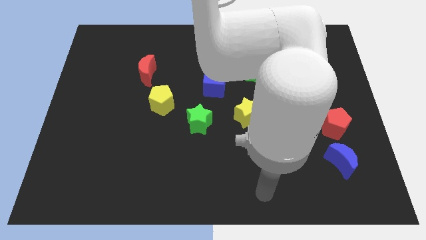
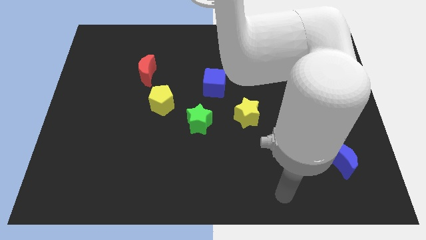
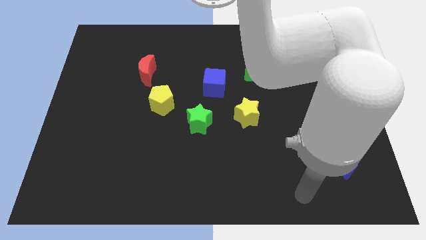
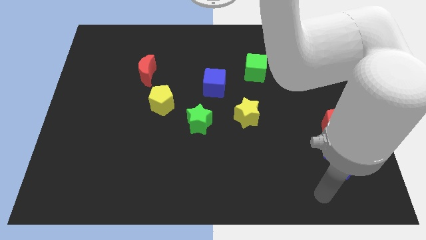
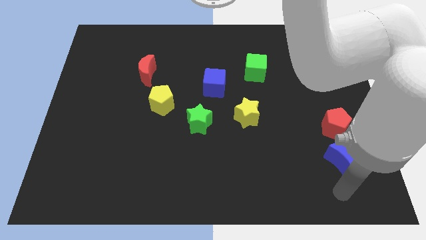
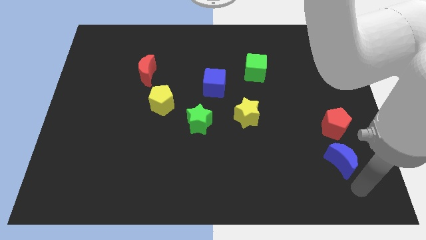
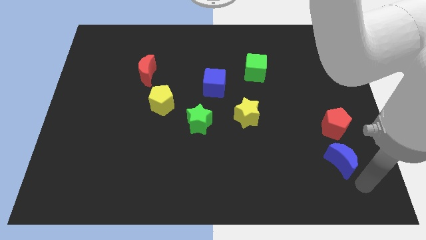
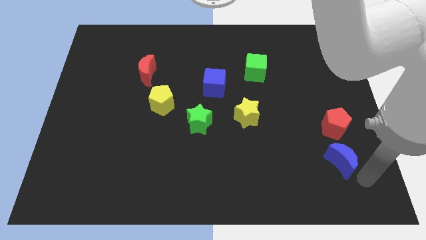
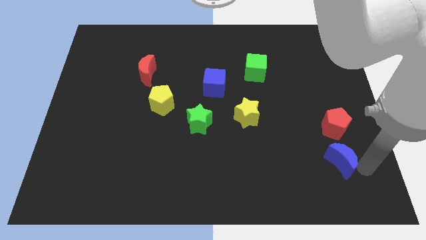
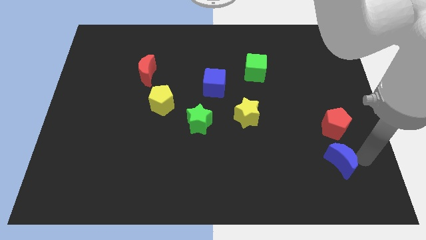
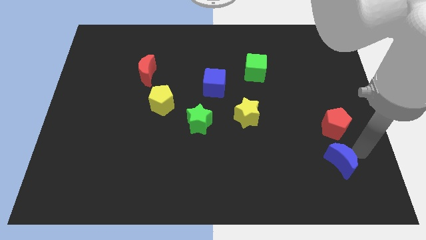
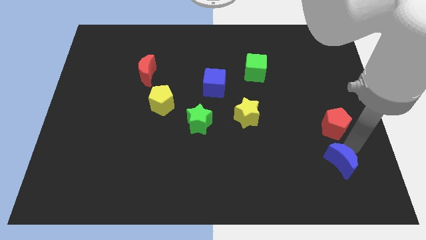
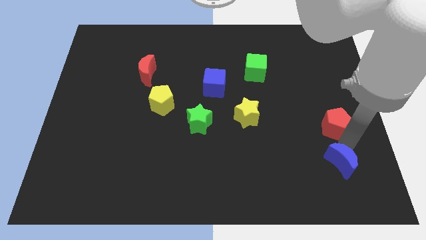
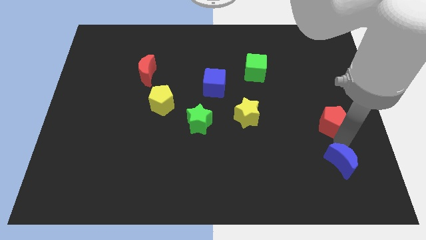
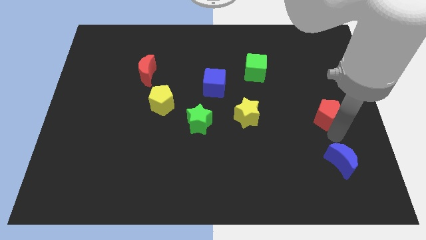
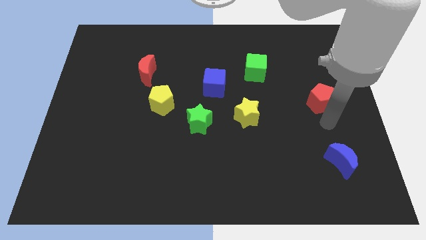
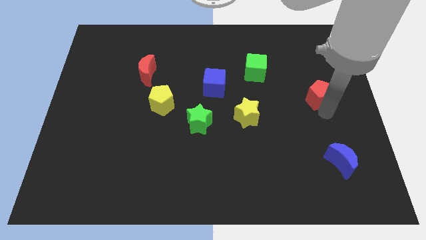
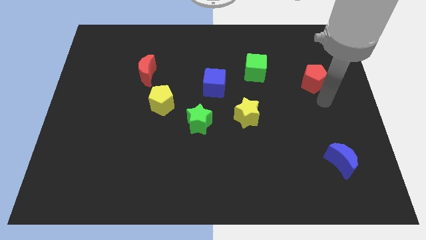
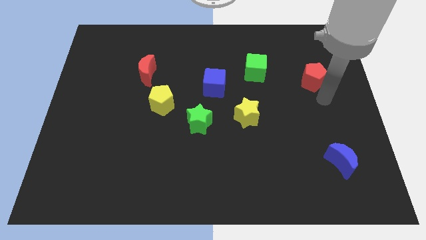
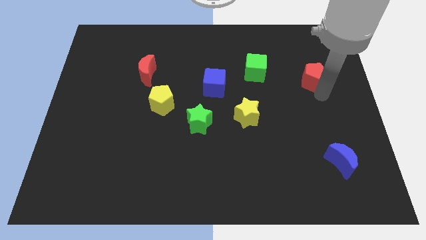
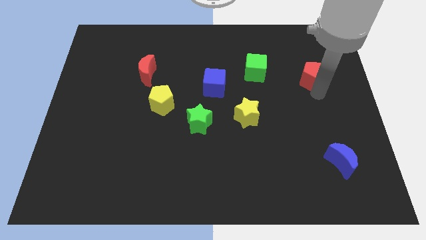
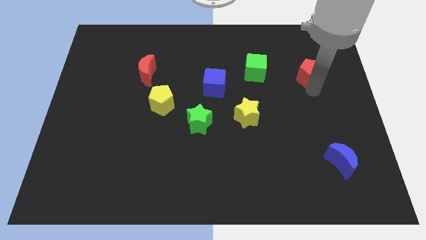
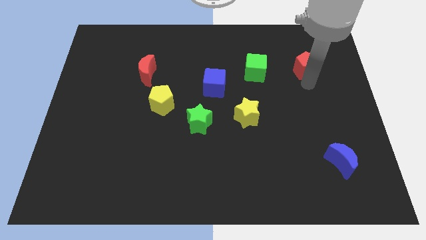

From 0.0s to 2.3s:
move the red pentagon to the right of the green cube

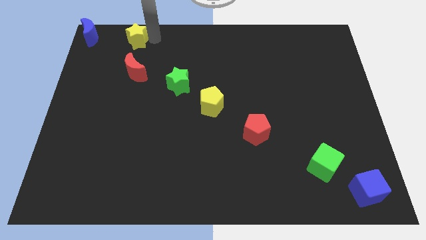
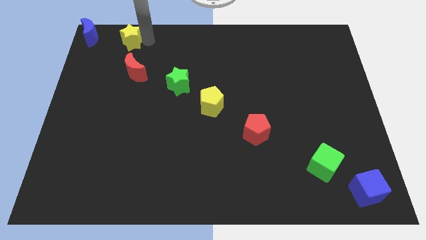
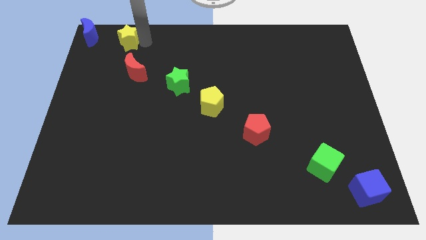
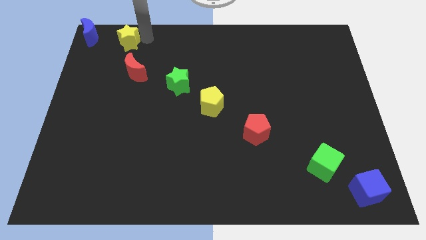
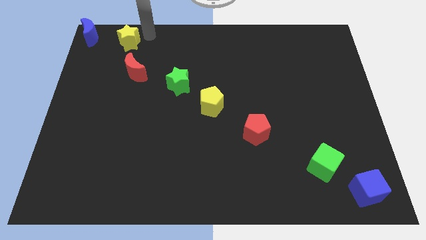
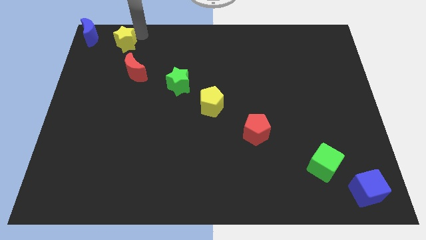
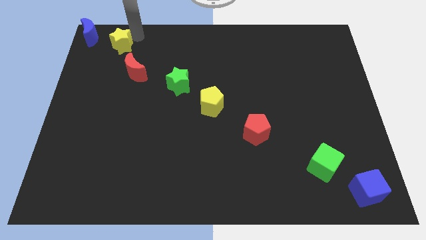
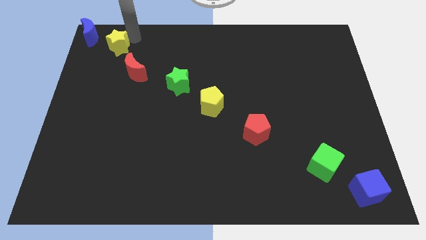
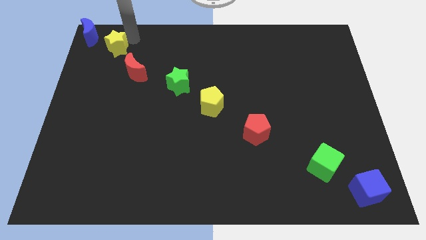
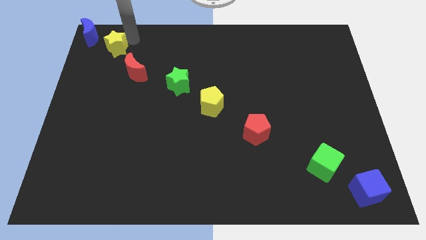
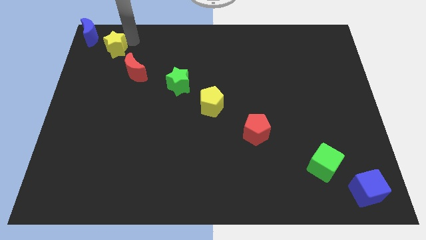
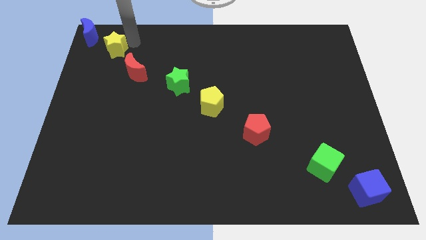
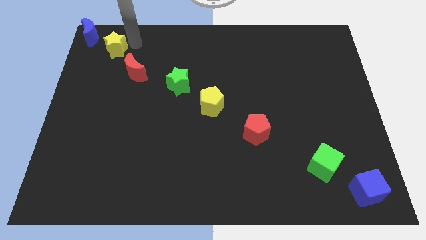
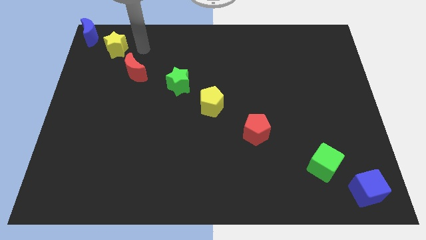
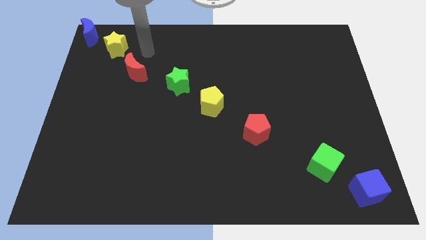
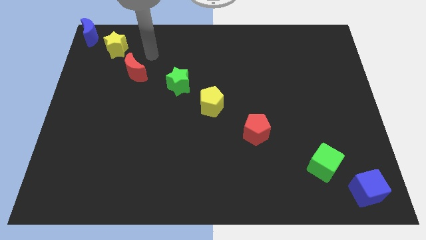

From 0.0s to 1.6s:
put the yellow star between the blue moon and red moon

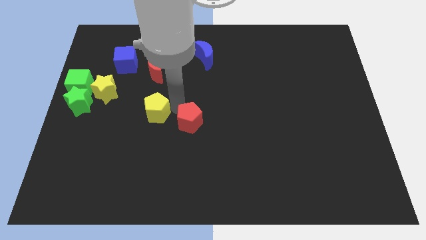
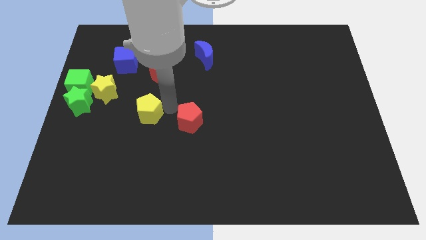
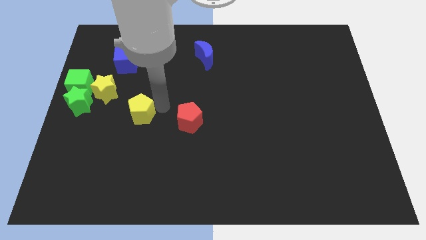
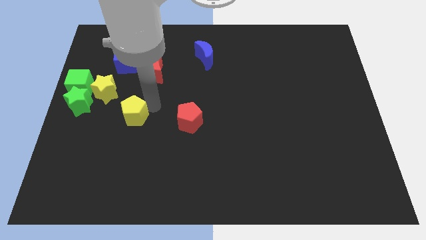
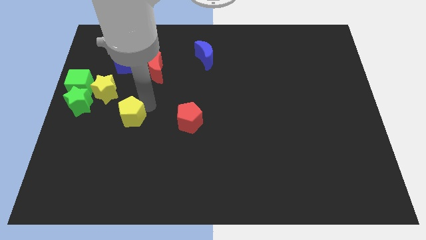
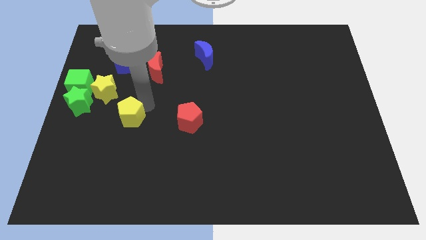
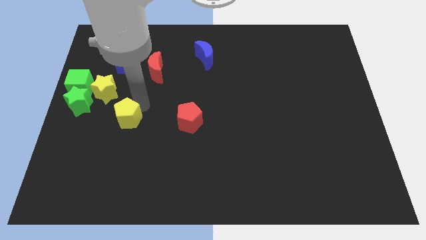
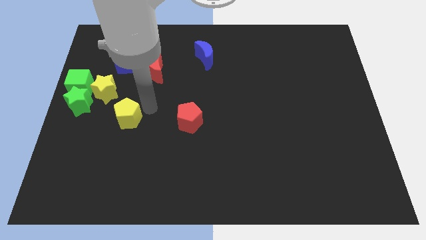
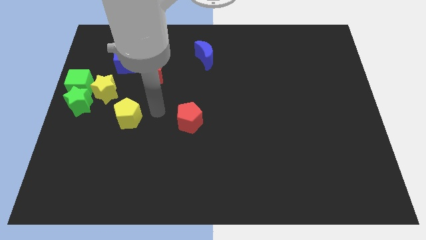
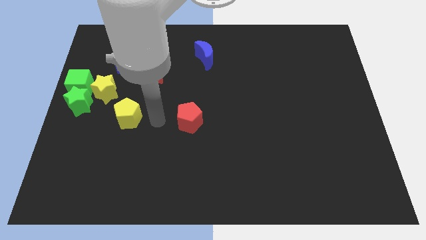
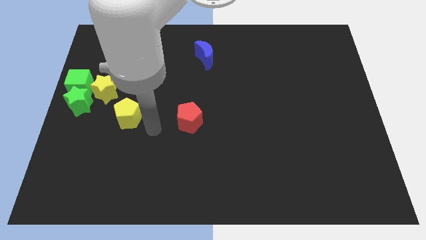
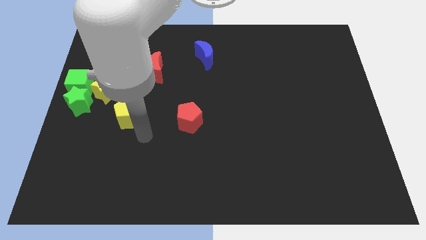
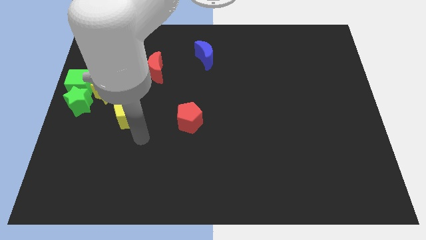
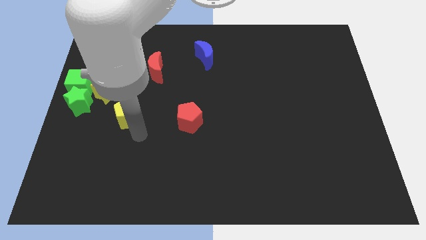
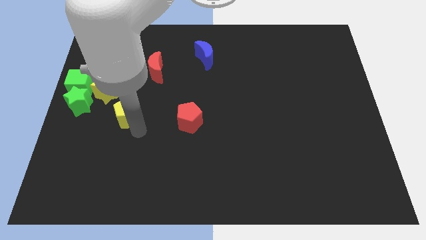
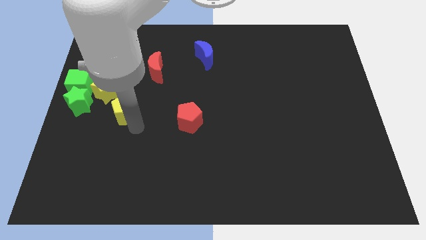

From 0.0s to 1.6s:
place the yellow pentagon to the right bottom of the yellow star

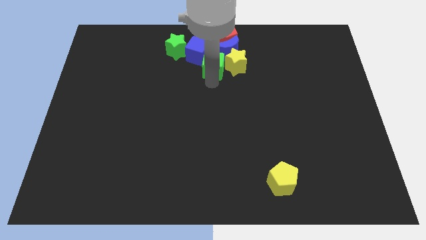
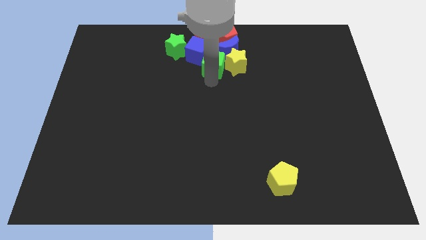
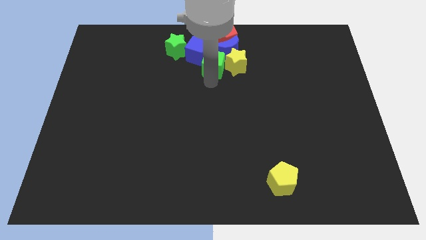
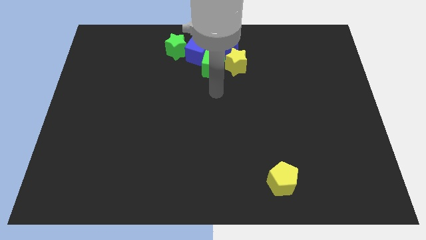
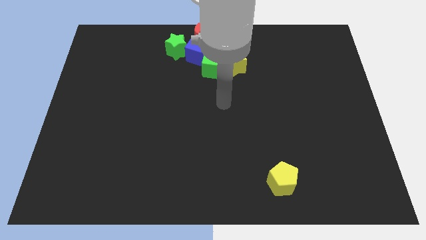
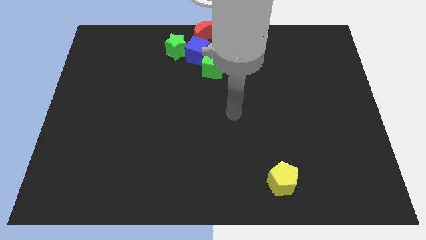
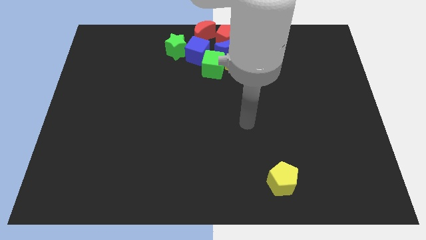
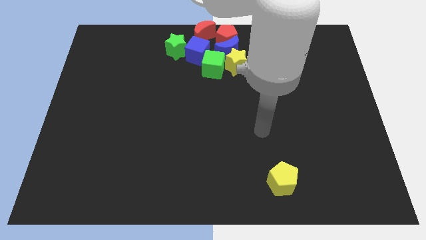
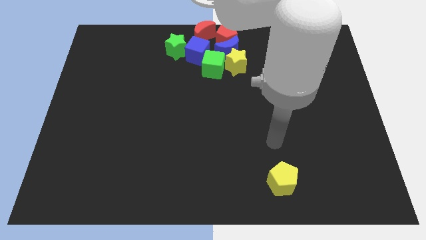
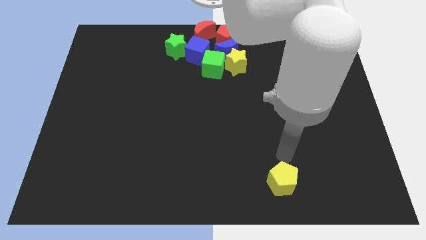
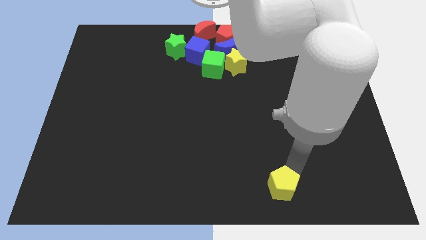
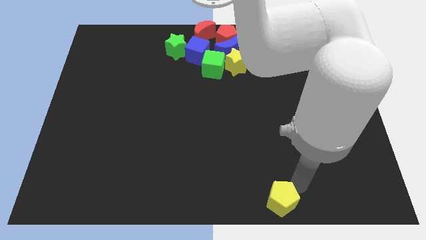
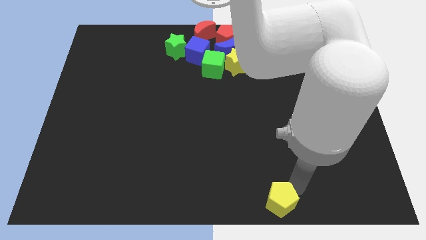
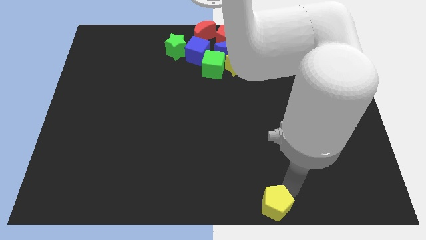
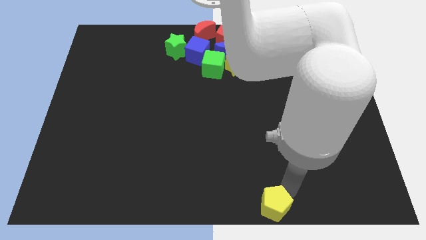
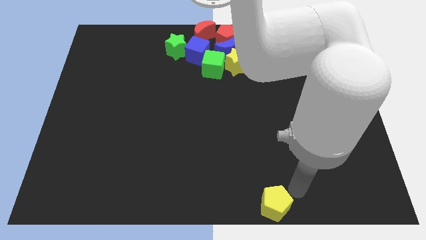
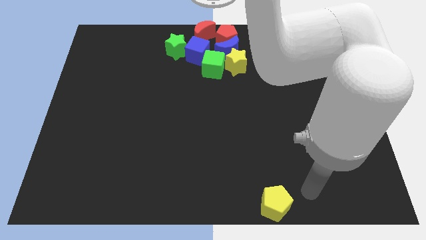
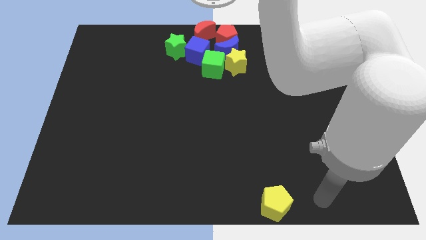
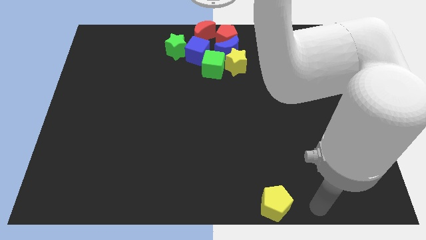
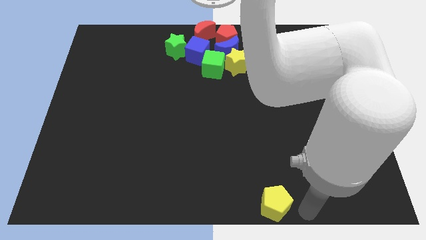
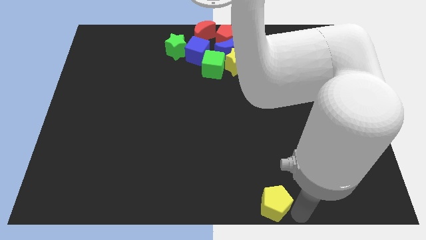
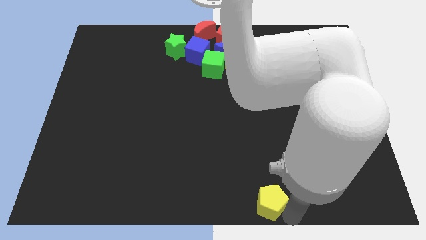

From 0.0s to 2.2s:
move the yellow pentagon towards the bottom center of the board

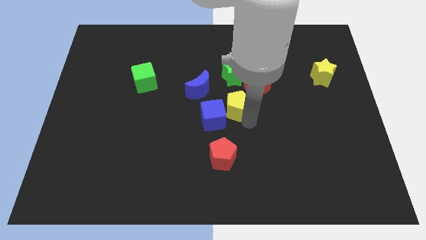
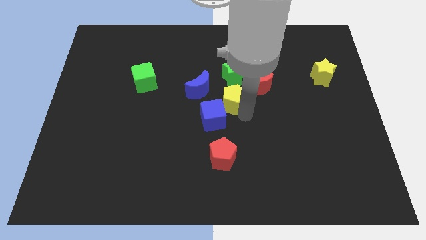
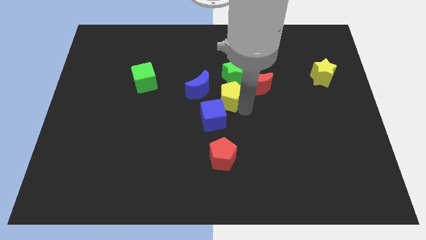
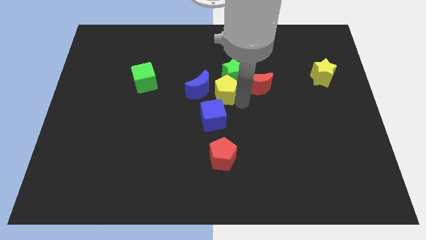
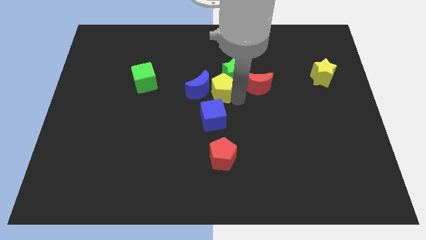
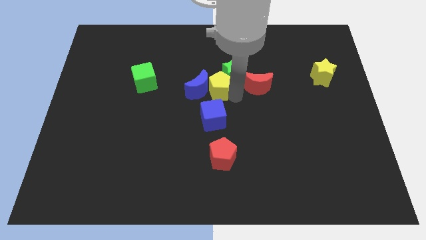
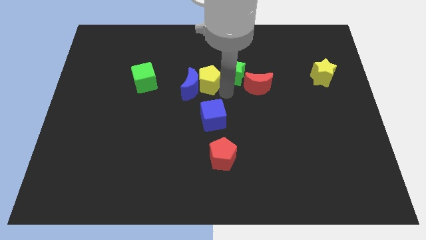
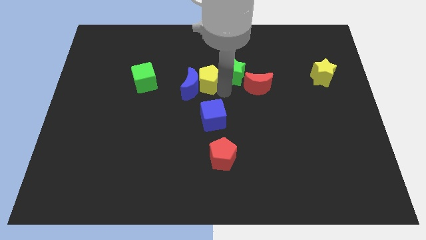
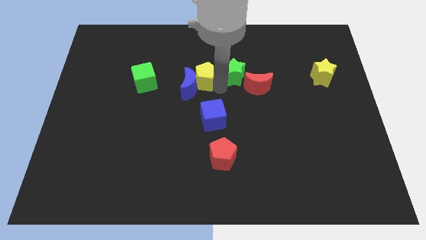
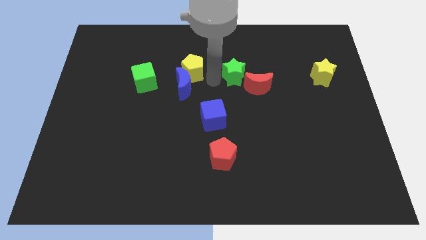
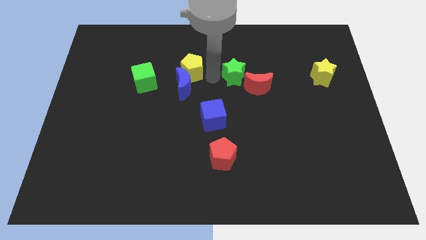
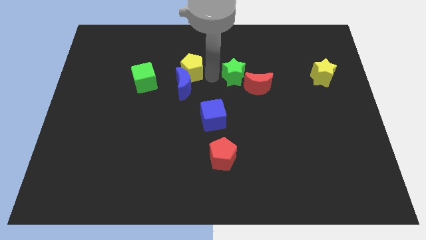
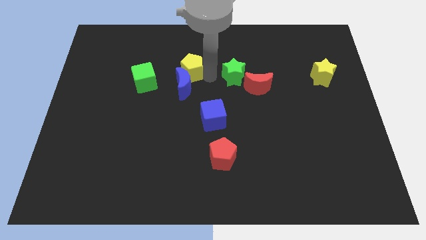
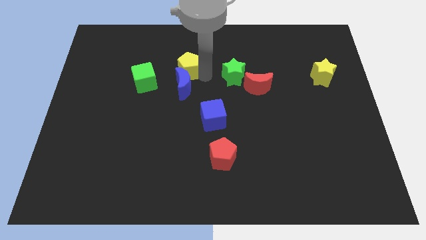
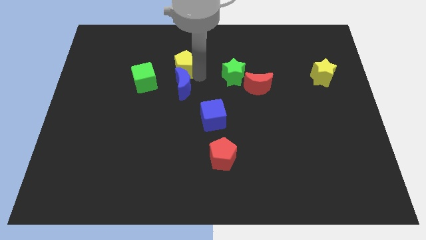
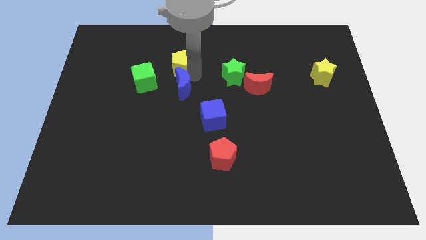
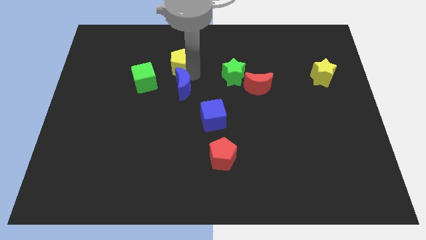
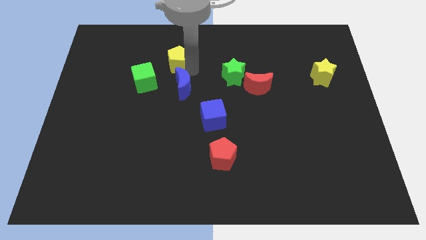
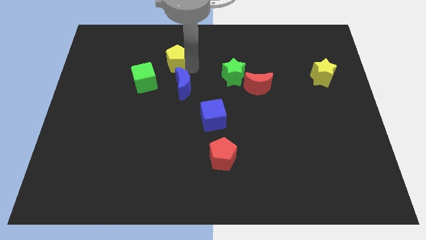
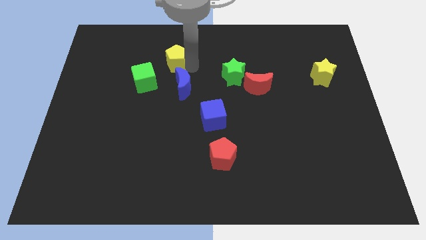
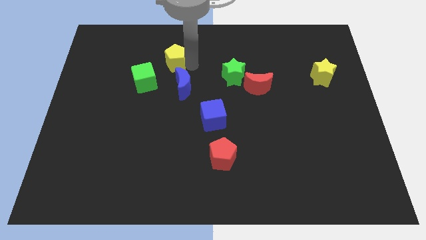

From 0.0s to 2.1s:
place the yellow pentagon above the blue crescent
